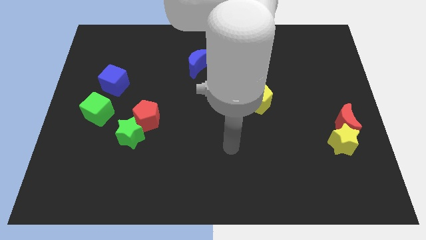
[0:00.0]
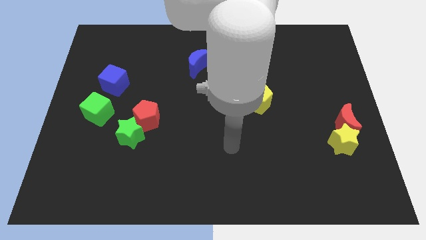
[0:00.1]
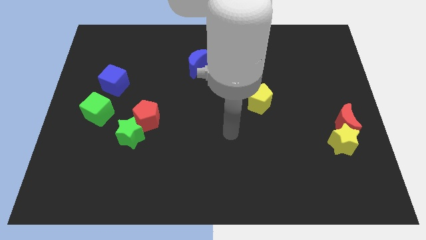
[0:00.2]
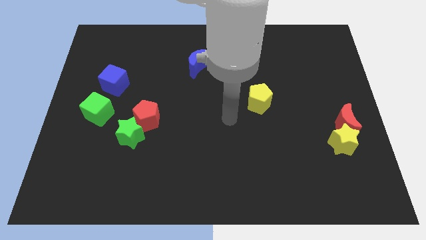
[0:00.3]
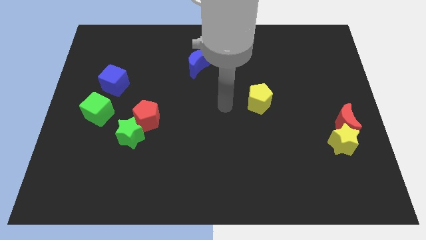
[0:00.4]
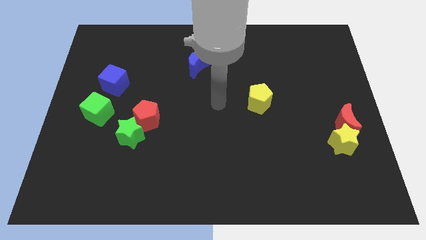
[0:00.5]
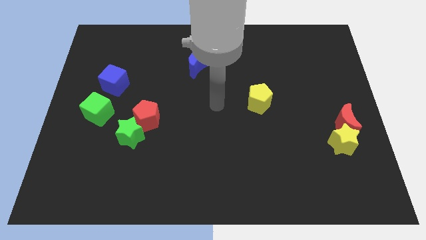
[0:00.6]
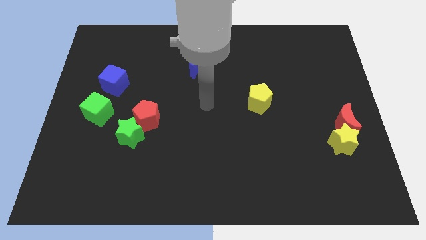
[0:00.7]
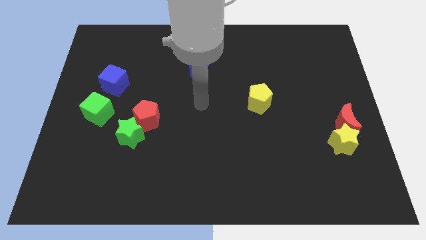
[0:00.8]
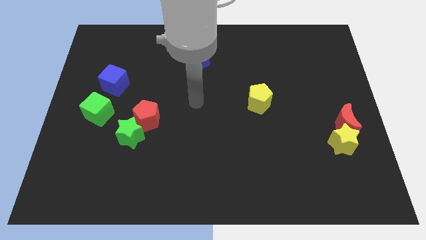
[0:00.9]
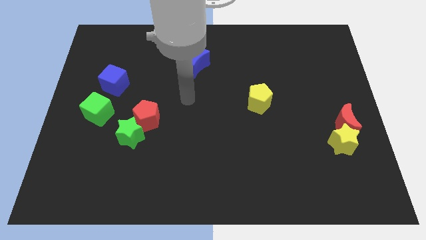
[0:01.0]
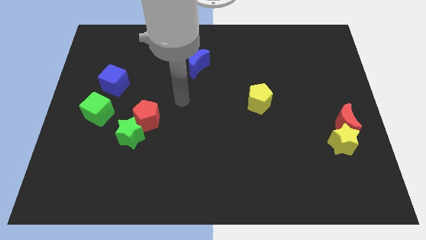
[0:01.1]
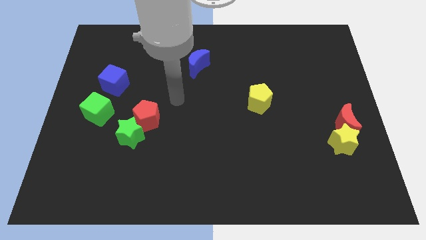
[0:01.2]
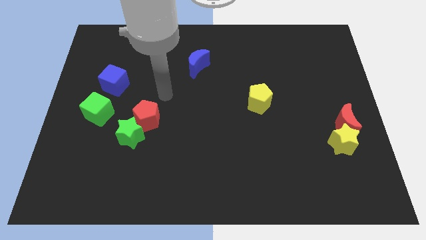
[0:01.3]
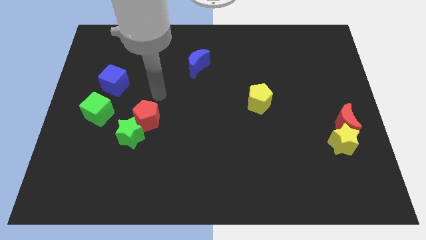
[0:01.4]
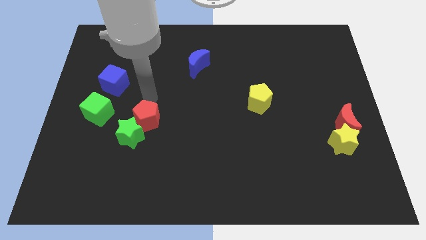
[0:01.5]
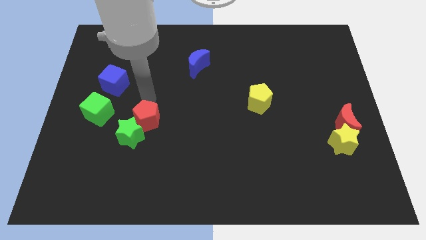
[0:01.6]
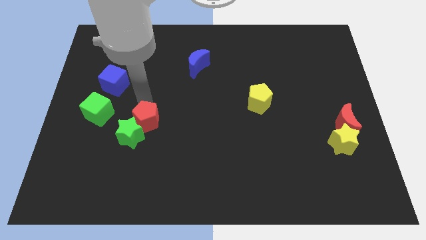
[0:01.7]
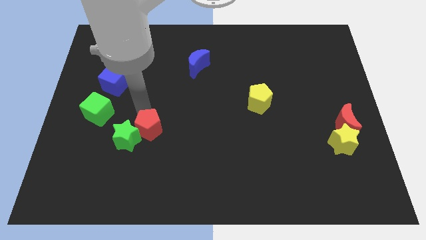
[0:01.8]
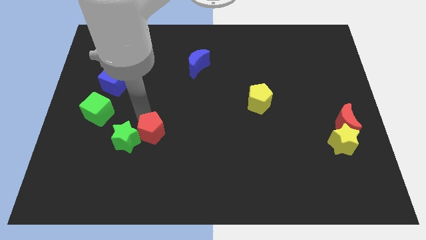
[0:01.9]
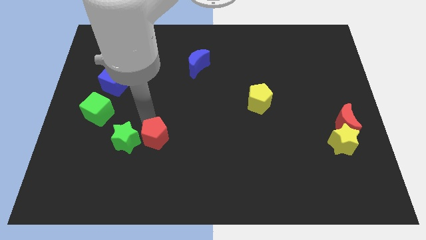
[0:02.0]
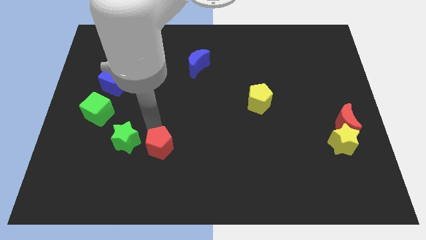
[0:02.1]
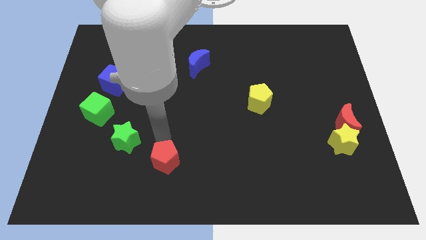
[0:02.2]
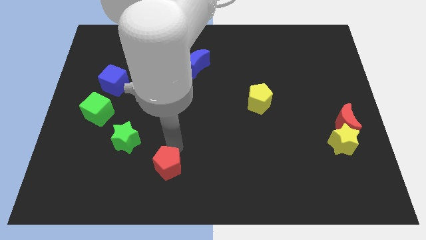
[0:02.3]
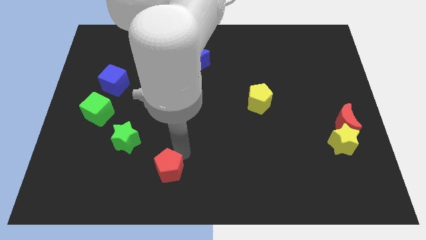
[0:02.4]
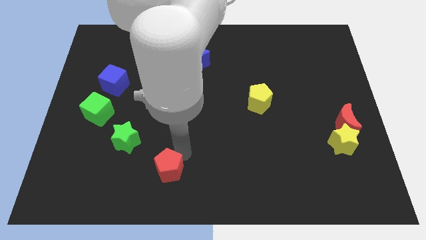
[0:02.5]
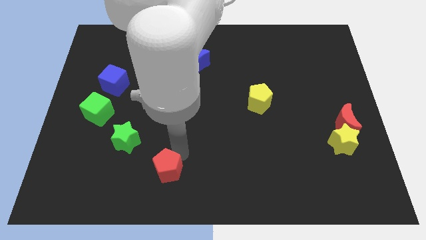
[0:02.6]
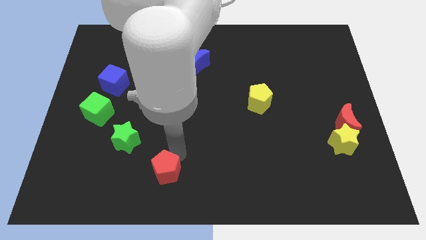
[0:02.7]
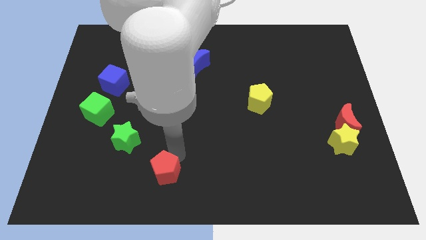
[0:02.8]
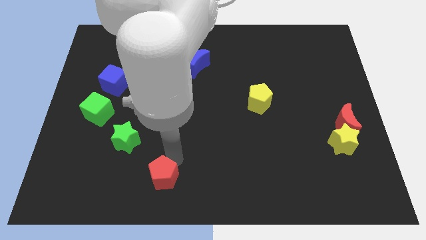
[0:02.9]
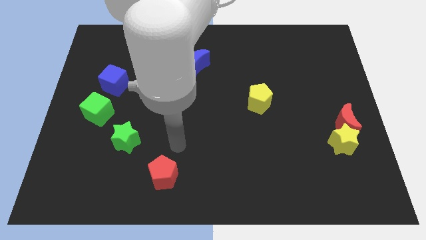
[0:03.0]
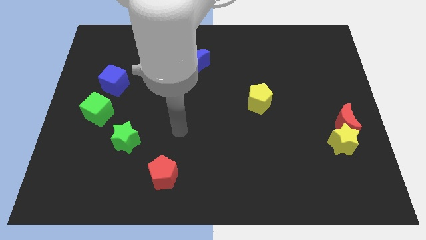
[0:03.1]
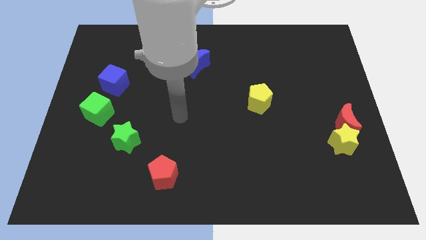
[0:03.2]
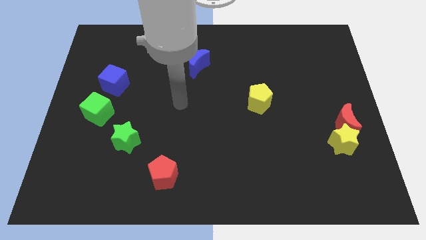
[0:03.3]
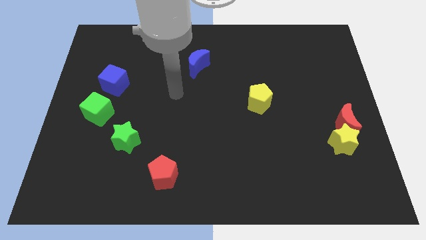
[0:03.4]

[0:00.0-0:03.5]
push red pentagon towards the bottom of the board

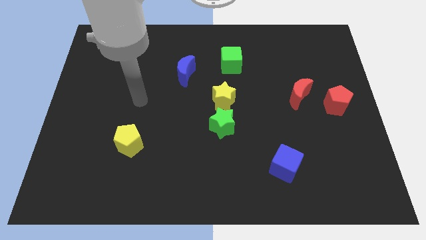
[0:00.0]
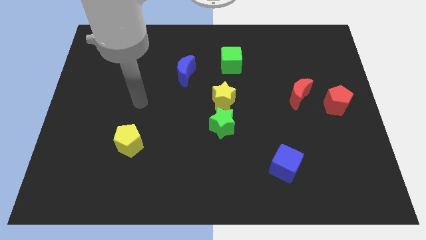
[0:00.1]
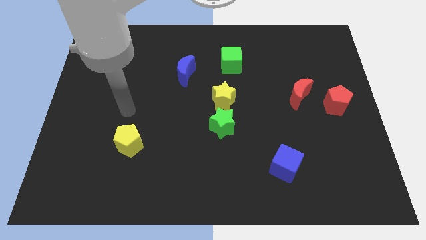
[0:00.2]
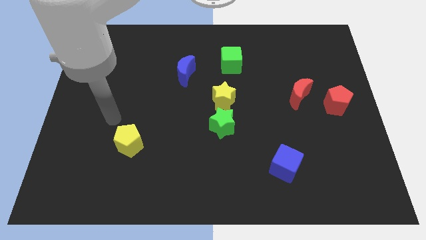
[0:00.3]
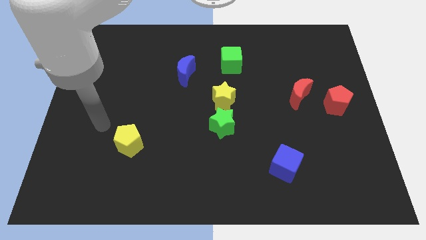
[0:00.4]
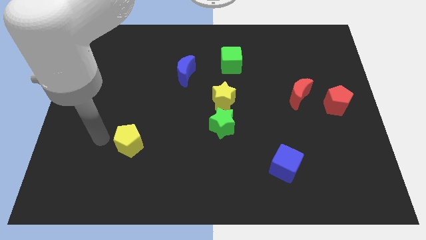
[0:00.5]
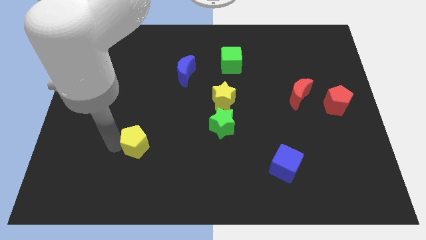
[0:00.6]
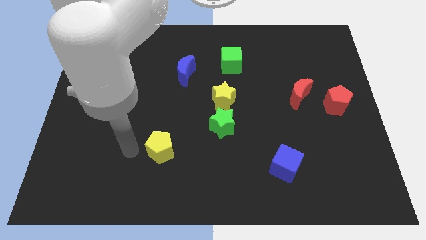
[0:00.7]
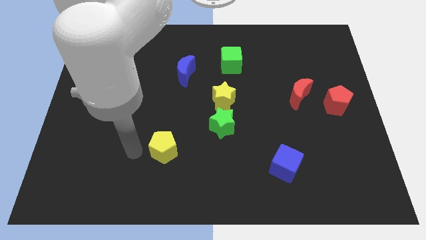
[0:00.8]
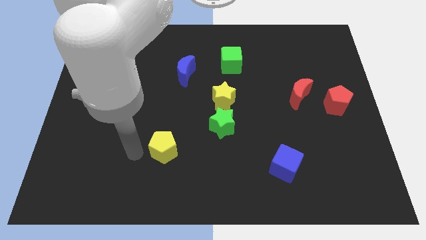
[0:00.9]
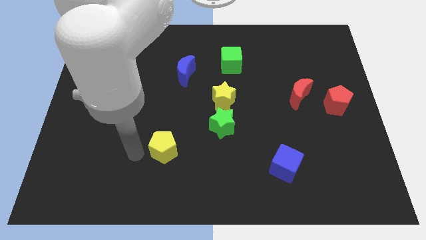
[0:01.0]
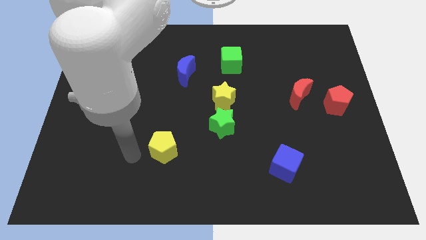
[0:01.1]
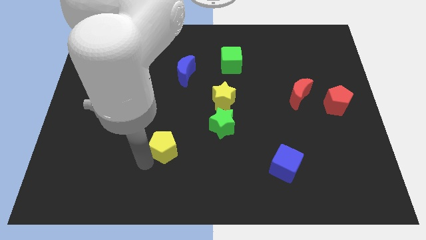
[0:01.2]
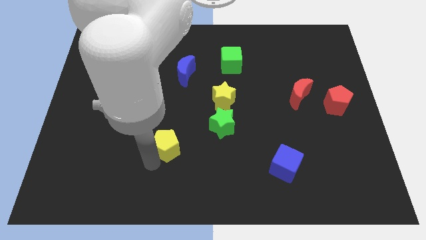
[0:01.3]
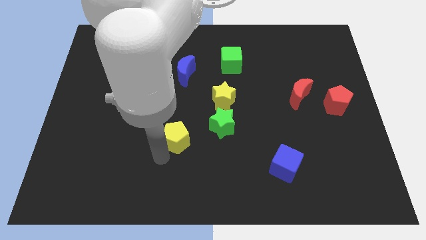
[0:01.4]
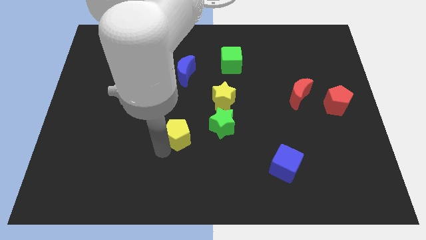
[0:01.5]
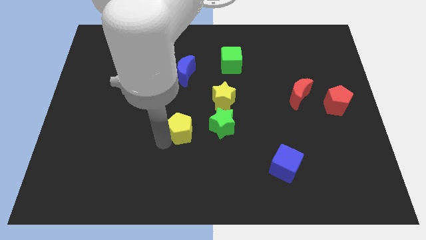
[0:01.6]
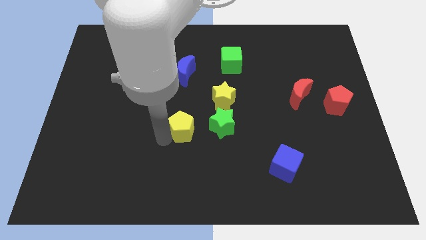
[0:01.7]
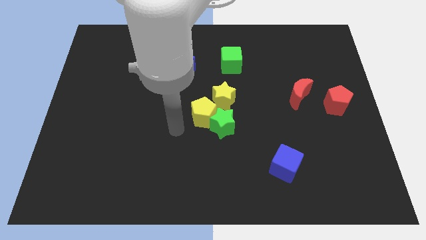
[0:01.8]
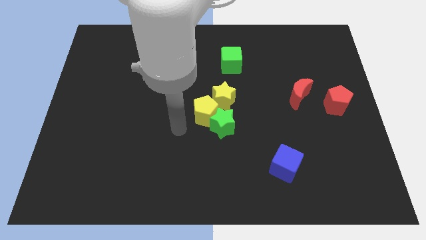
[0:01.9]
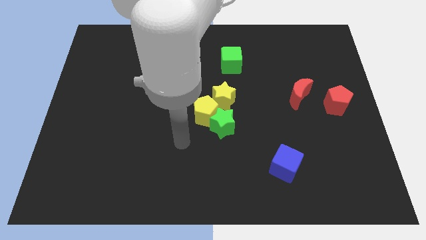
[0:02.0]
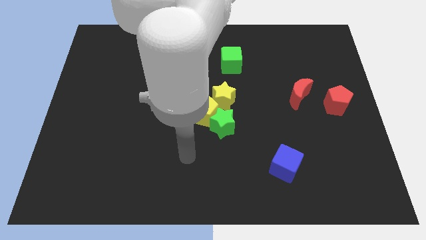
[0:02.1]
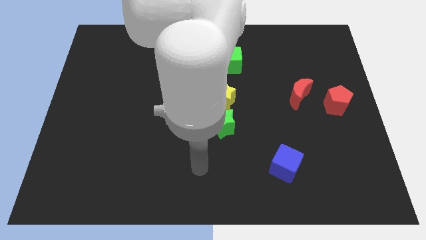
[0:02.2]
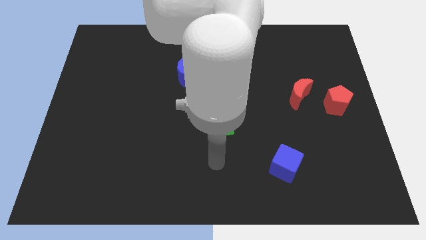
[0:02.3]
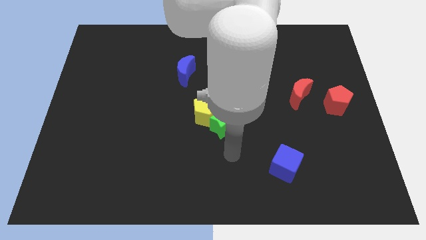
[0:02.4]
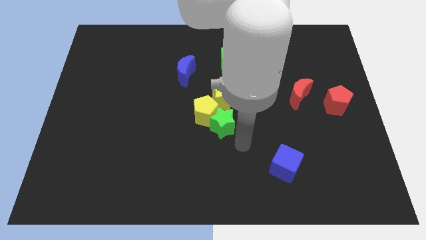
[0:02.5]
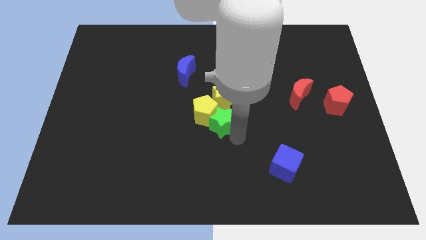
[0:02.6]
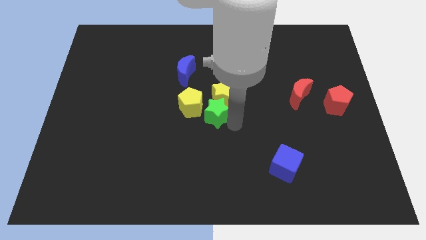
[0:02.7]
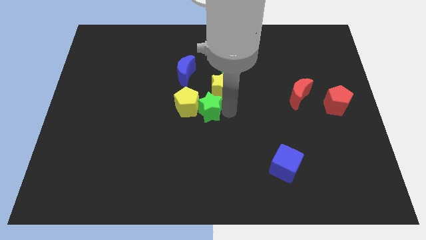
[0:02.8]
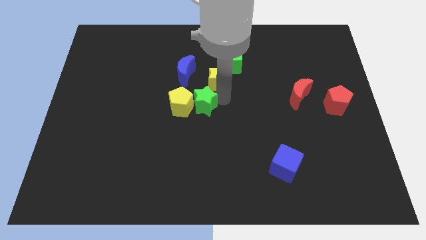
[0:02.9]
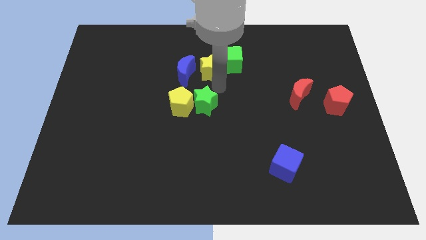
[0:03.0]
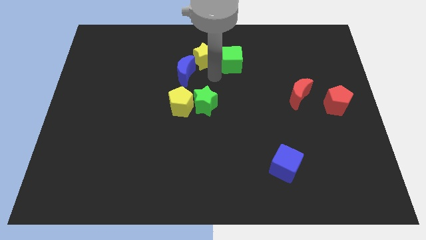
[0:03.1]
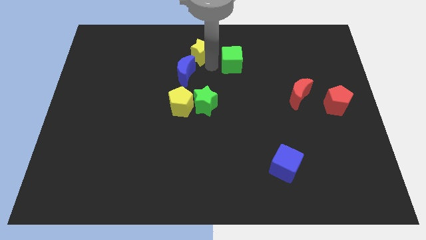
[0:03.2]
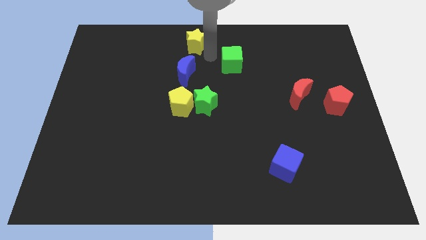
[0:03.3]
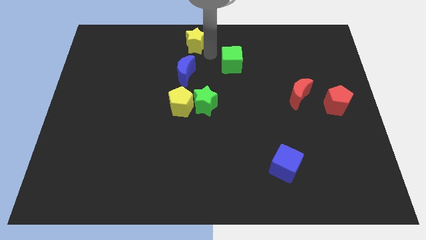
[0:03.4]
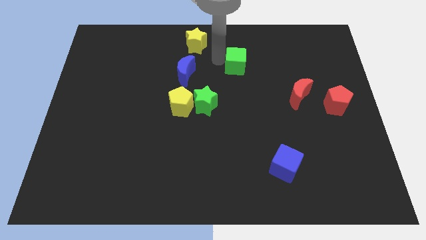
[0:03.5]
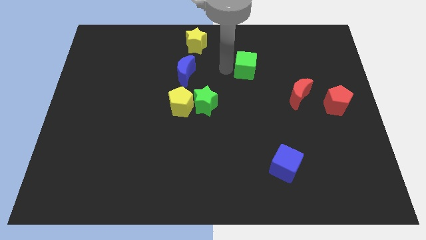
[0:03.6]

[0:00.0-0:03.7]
push the yellow blocks green star and blue moon towards the top side of the board

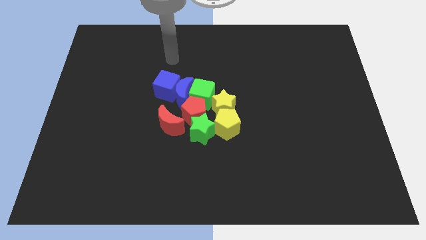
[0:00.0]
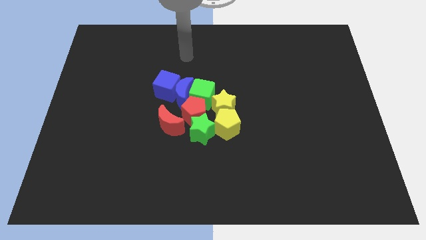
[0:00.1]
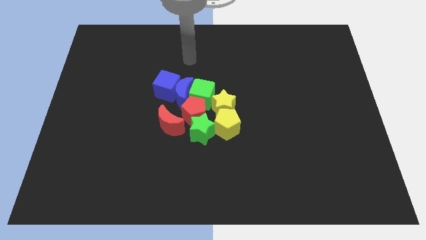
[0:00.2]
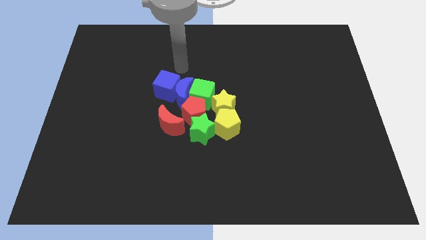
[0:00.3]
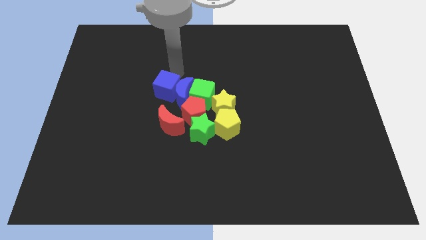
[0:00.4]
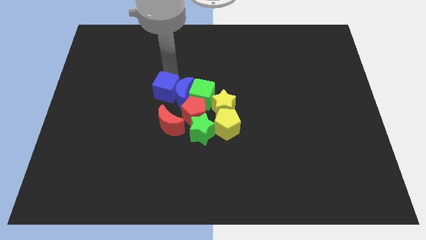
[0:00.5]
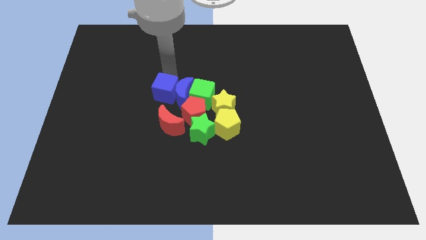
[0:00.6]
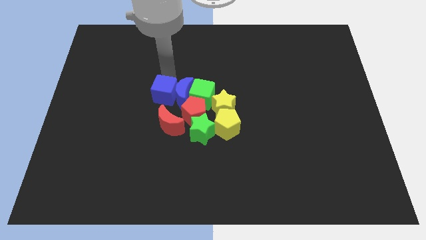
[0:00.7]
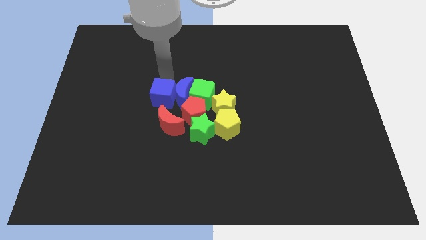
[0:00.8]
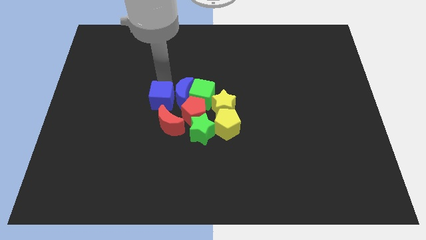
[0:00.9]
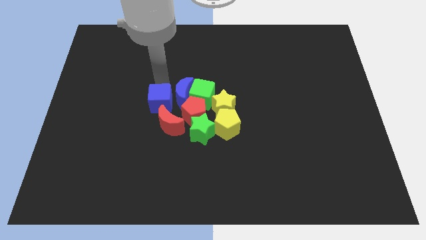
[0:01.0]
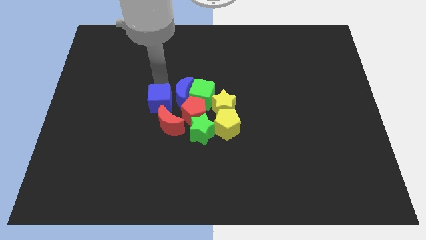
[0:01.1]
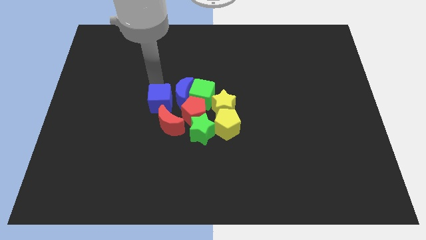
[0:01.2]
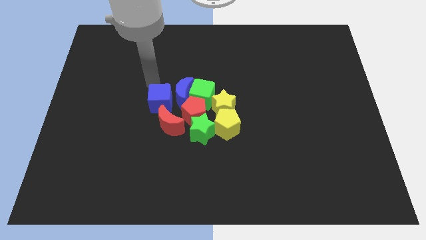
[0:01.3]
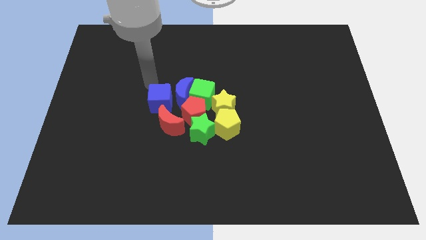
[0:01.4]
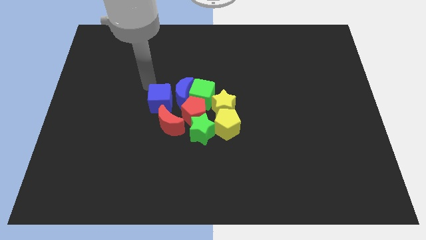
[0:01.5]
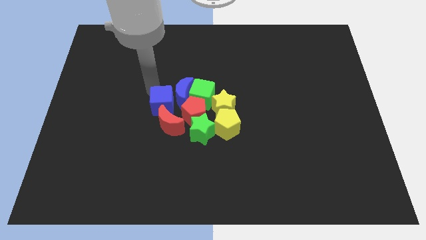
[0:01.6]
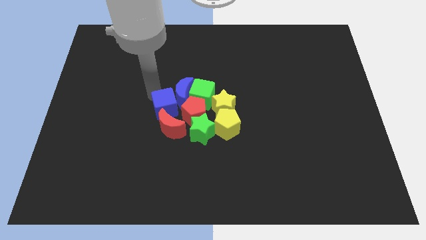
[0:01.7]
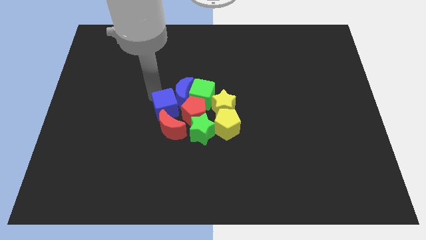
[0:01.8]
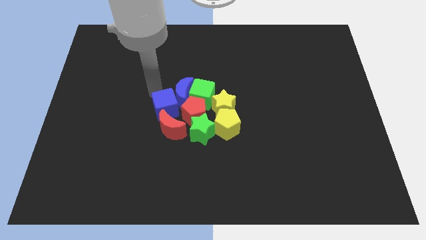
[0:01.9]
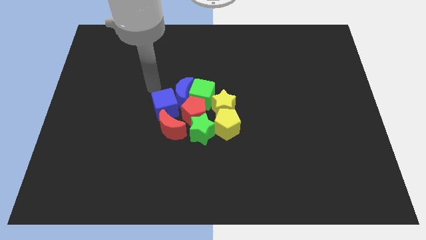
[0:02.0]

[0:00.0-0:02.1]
place the blue cube in between the blue moon and the red moon
